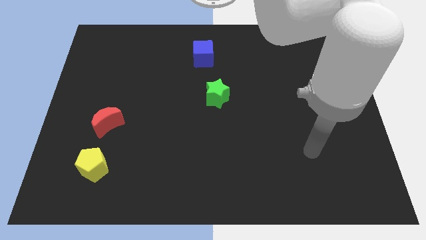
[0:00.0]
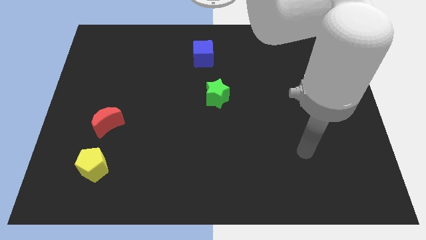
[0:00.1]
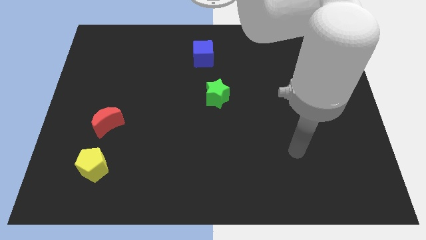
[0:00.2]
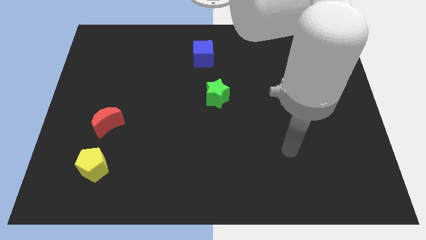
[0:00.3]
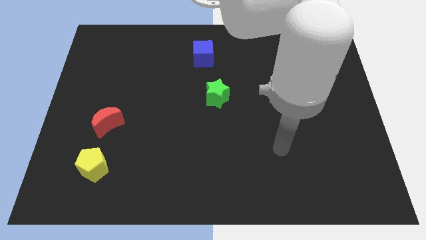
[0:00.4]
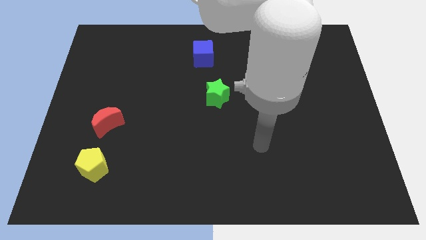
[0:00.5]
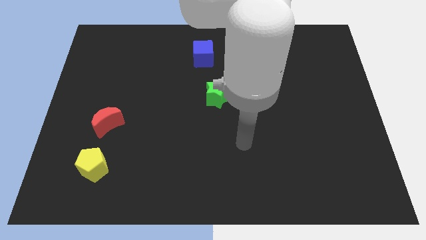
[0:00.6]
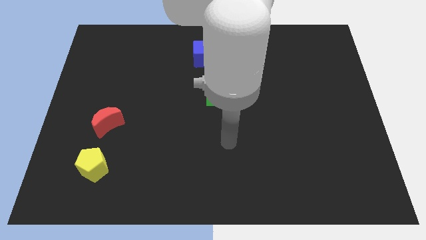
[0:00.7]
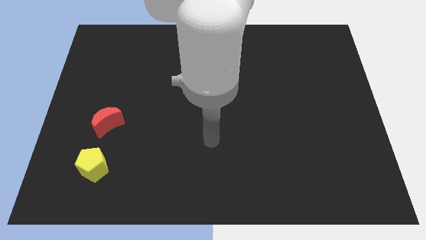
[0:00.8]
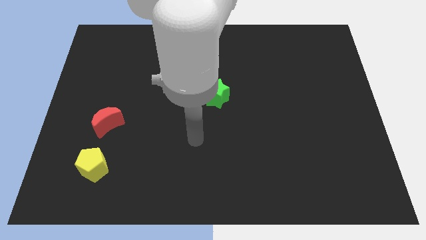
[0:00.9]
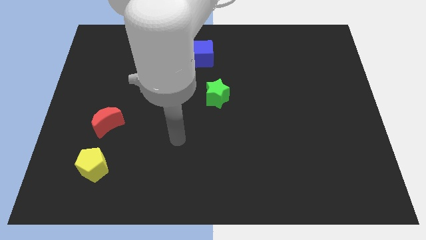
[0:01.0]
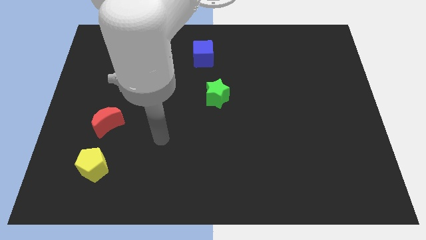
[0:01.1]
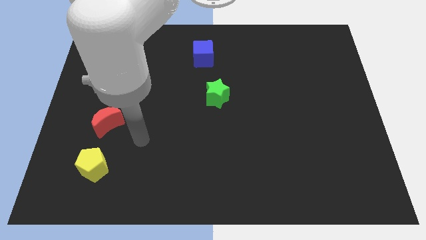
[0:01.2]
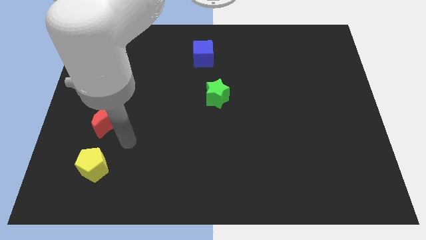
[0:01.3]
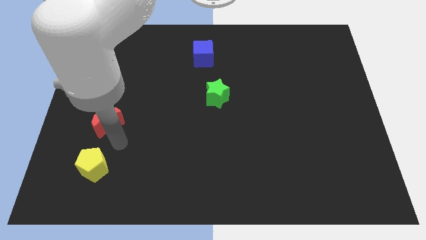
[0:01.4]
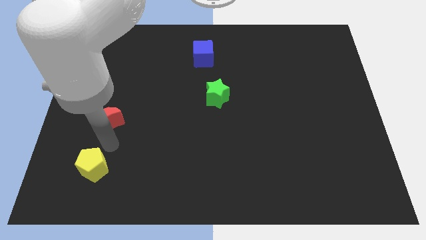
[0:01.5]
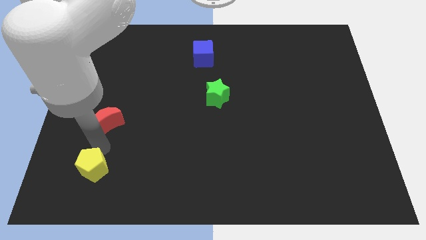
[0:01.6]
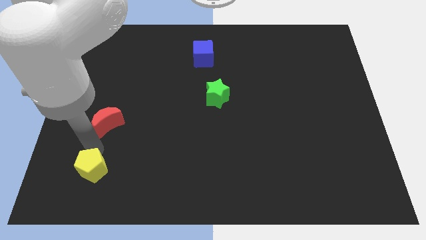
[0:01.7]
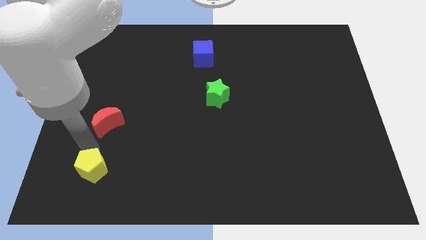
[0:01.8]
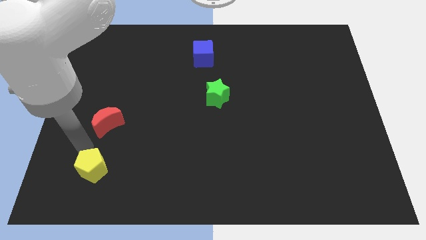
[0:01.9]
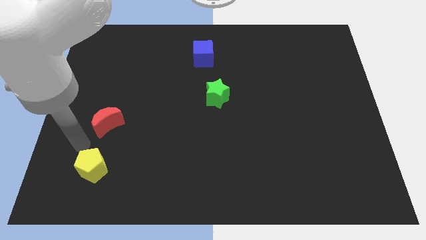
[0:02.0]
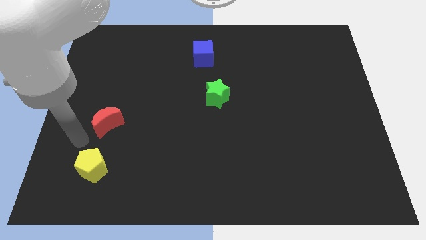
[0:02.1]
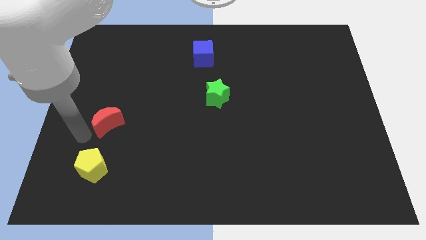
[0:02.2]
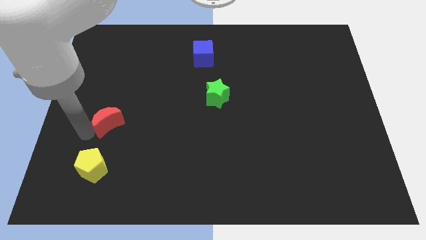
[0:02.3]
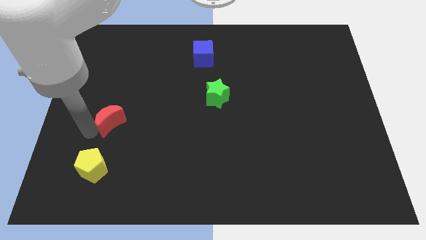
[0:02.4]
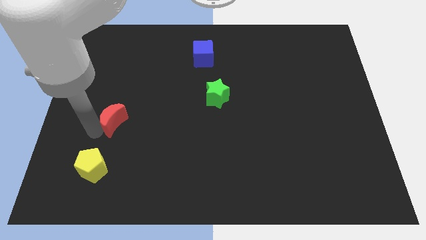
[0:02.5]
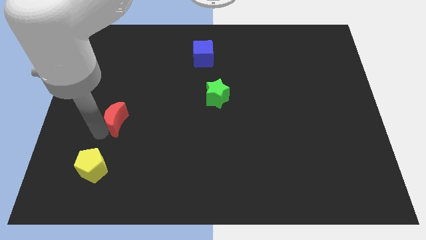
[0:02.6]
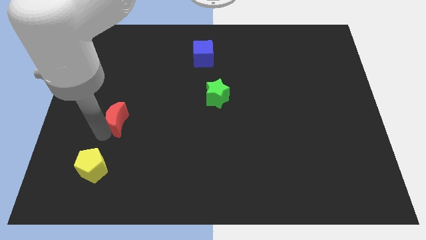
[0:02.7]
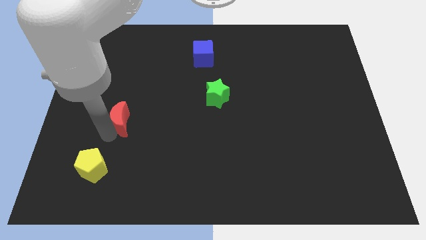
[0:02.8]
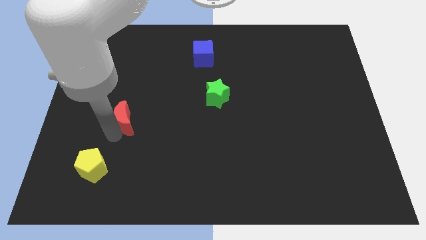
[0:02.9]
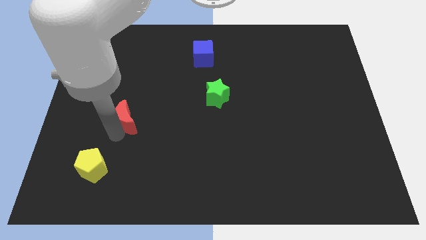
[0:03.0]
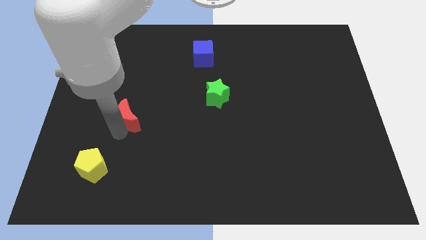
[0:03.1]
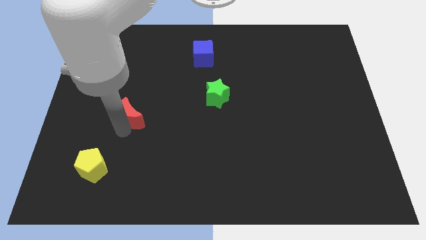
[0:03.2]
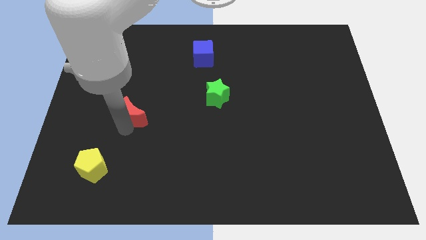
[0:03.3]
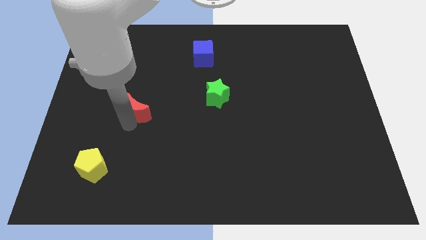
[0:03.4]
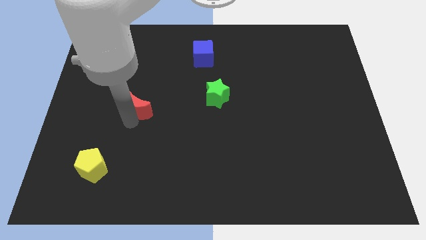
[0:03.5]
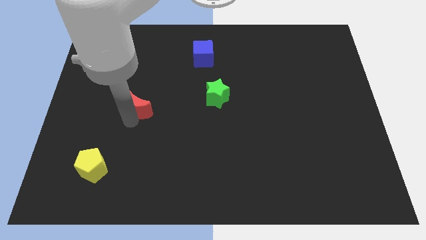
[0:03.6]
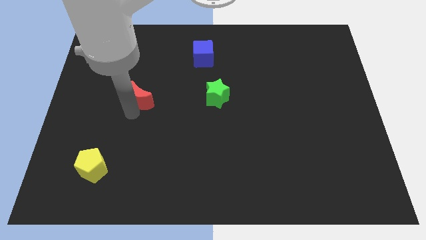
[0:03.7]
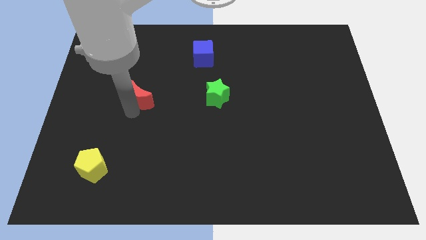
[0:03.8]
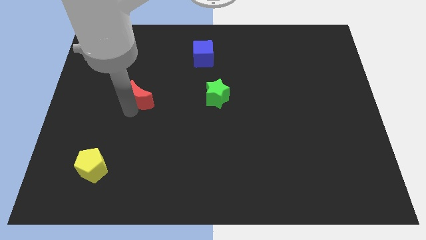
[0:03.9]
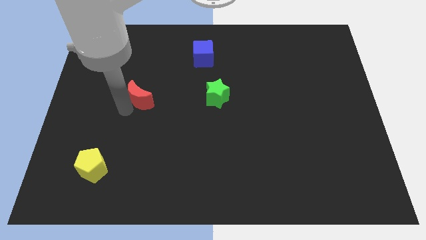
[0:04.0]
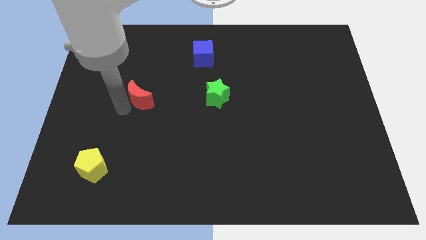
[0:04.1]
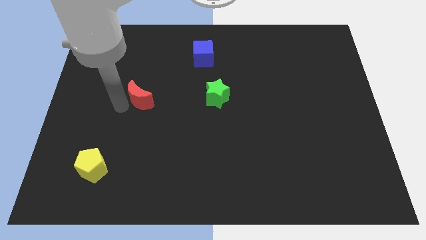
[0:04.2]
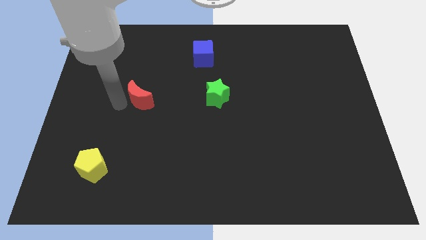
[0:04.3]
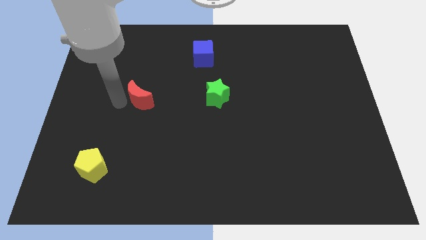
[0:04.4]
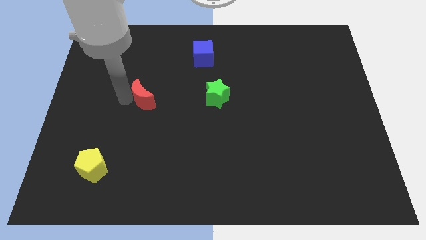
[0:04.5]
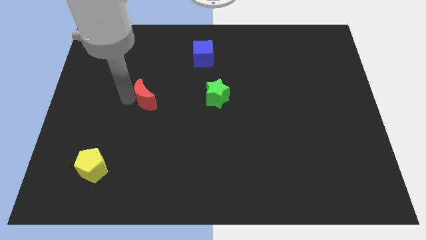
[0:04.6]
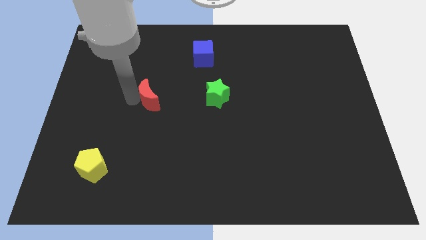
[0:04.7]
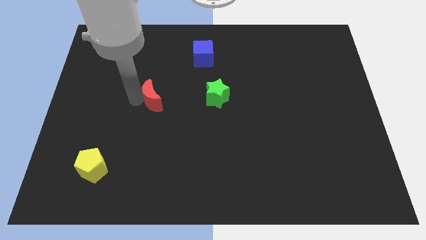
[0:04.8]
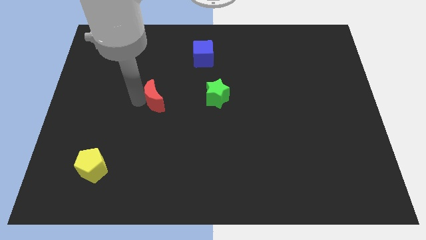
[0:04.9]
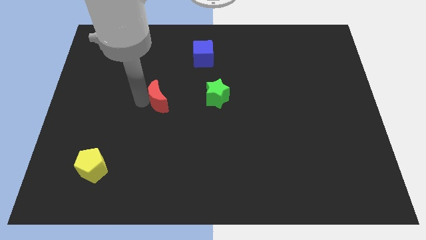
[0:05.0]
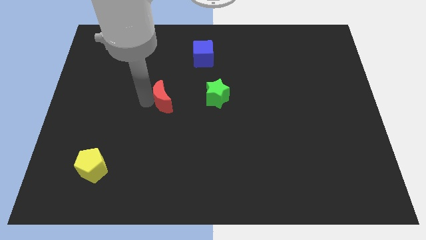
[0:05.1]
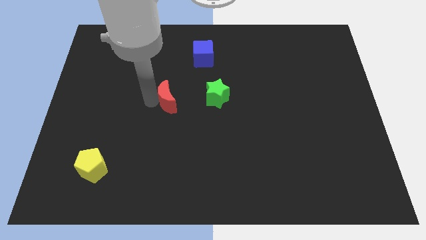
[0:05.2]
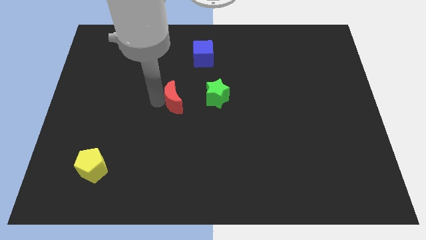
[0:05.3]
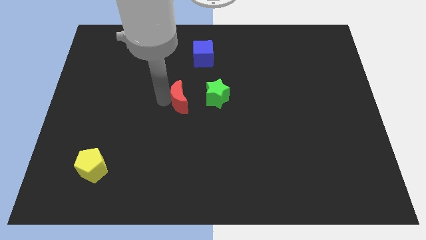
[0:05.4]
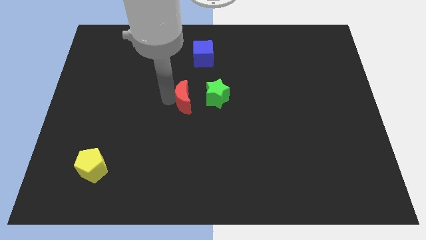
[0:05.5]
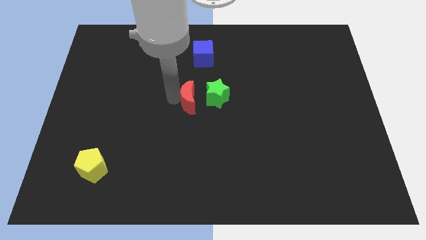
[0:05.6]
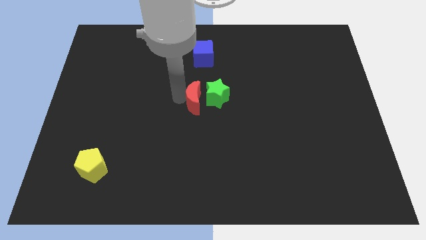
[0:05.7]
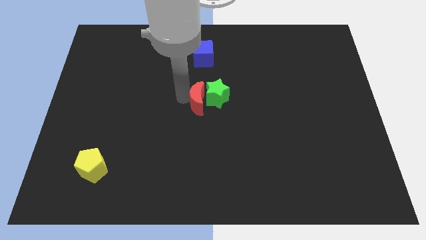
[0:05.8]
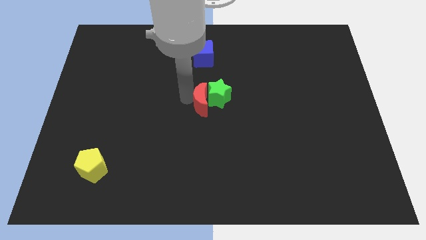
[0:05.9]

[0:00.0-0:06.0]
push the red moon towards the green block

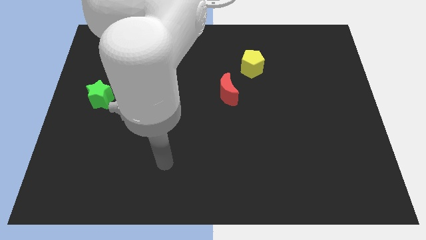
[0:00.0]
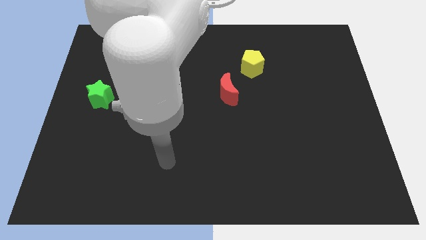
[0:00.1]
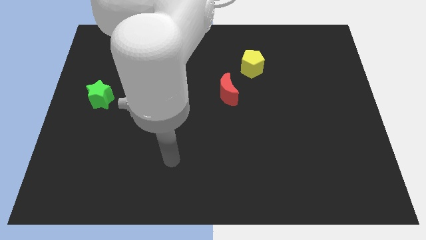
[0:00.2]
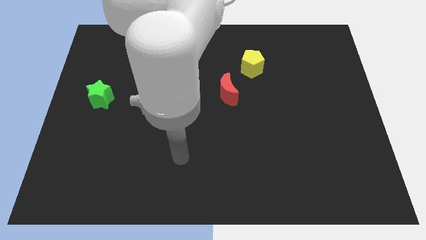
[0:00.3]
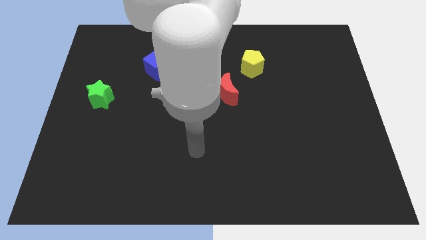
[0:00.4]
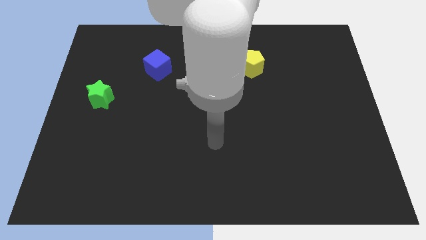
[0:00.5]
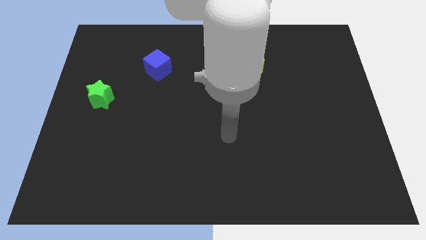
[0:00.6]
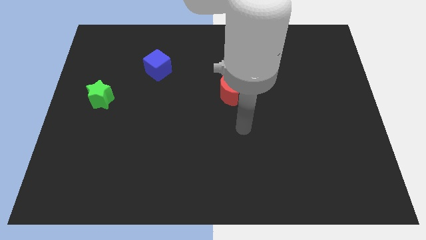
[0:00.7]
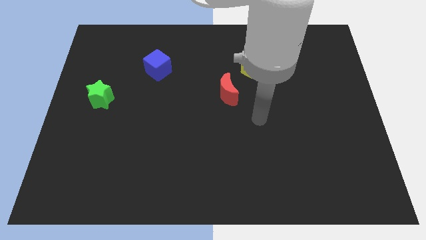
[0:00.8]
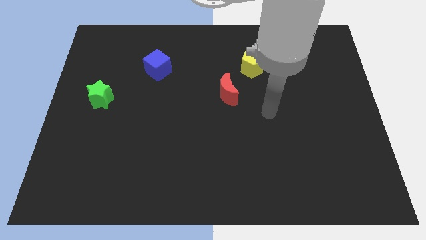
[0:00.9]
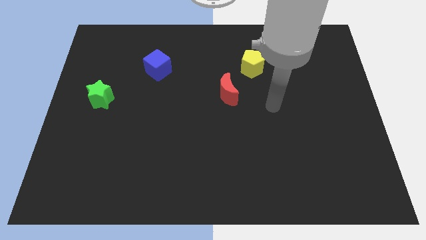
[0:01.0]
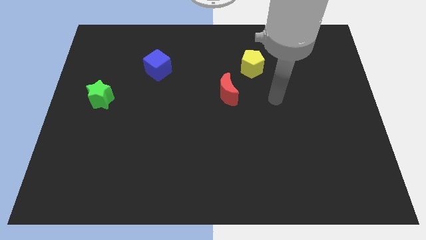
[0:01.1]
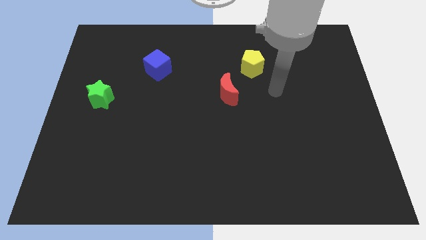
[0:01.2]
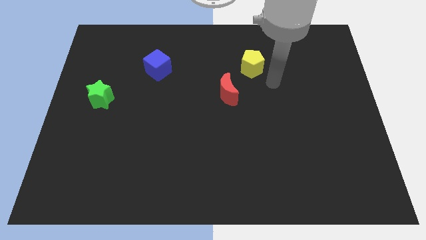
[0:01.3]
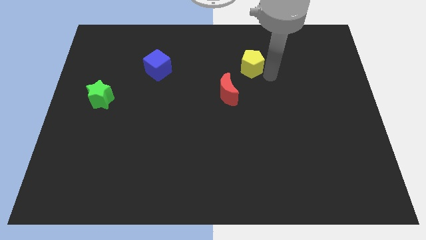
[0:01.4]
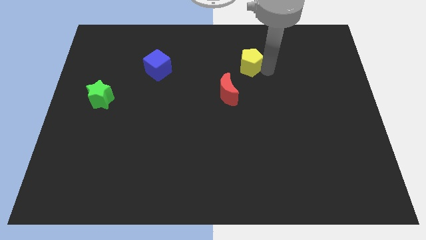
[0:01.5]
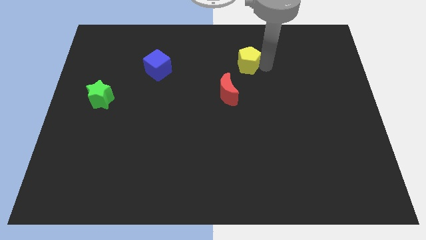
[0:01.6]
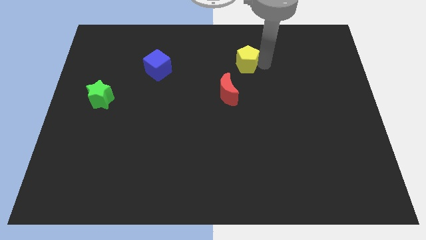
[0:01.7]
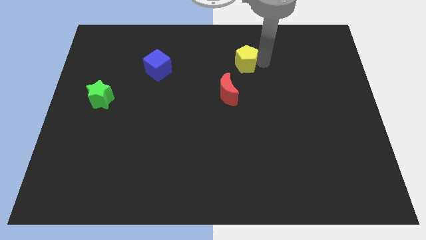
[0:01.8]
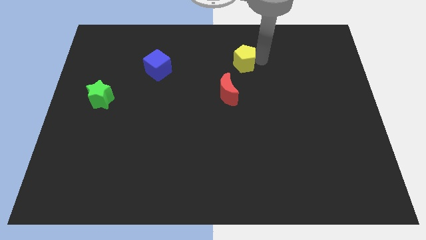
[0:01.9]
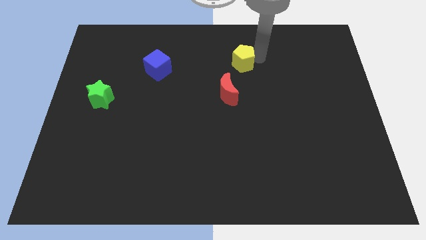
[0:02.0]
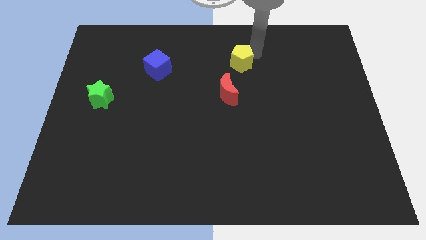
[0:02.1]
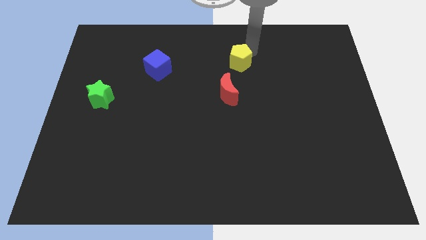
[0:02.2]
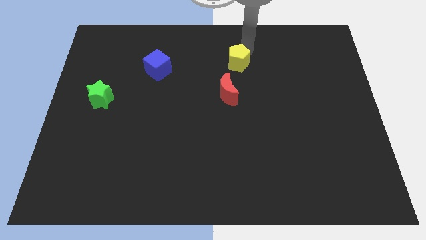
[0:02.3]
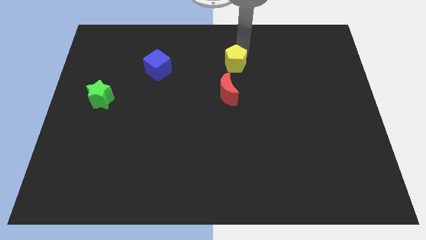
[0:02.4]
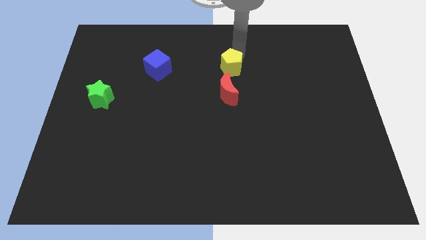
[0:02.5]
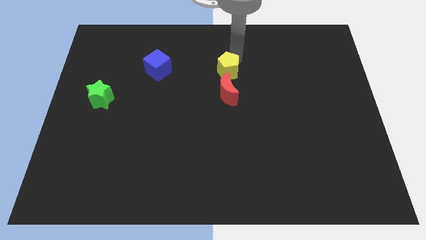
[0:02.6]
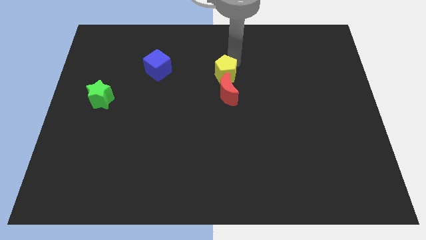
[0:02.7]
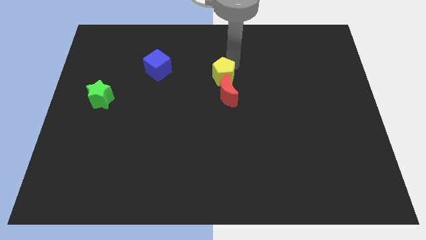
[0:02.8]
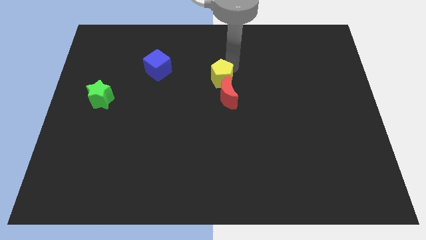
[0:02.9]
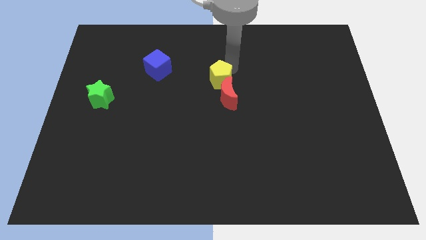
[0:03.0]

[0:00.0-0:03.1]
push the yellow pentagon close to the red moon
